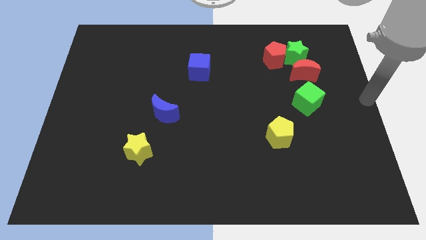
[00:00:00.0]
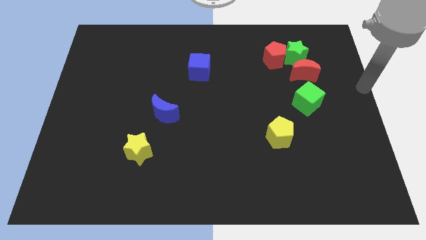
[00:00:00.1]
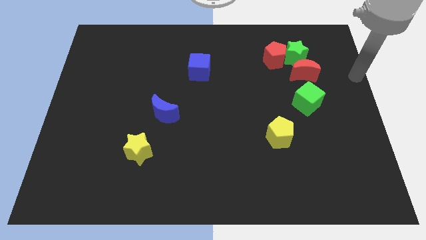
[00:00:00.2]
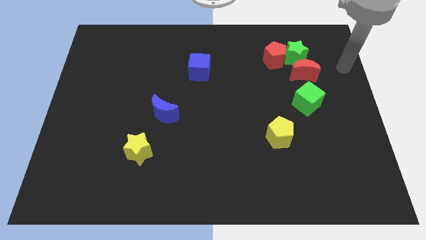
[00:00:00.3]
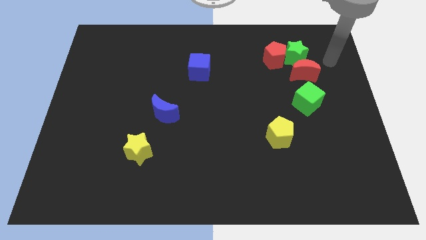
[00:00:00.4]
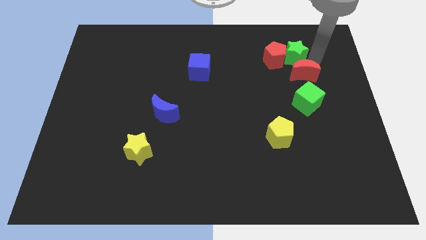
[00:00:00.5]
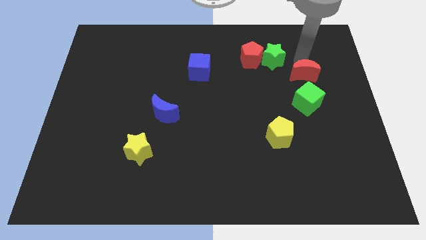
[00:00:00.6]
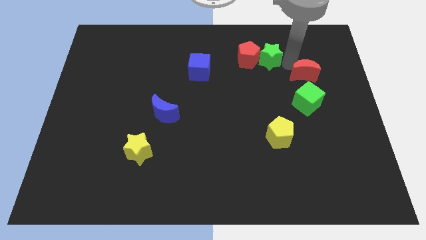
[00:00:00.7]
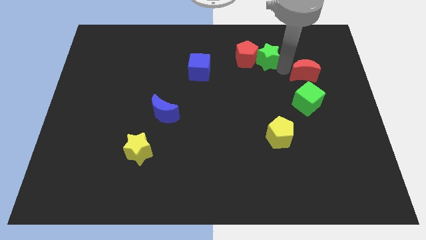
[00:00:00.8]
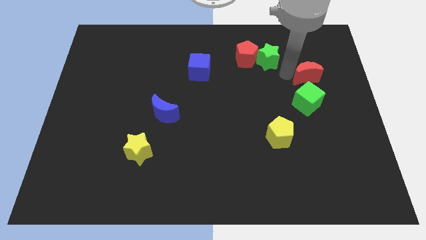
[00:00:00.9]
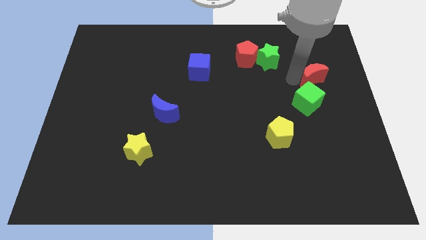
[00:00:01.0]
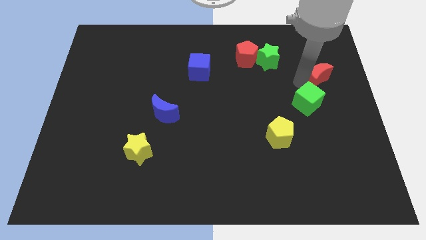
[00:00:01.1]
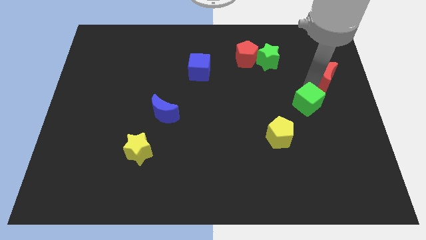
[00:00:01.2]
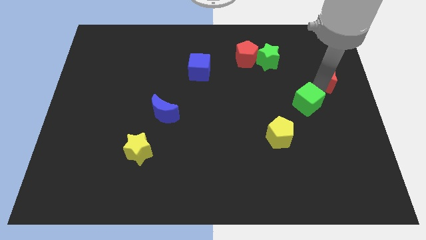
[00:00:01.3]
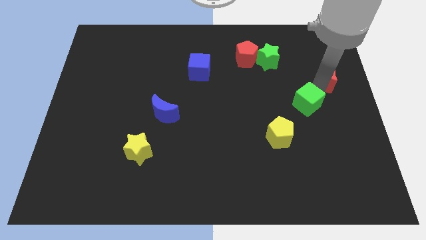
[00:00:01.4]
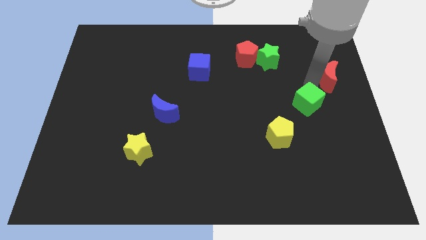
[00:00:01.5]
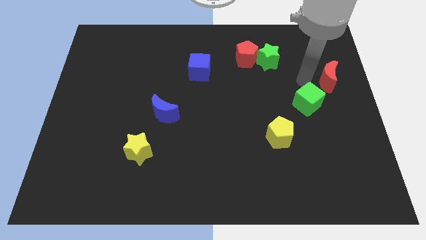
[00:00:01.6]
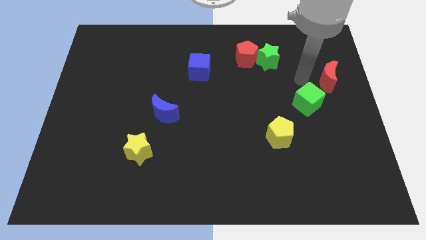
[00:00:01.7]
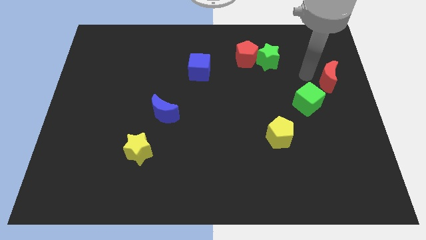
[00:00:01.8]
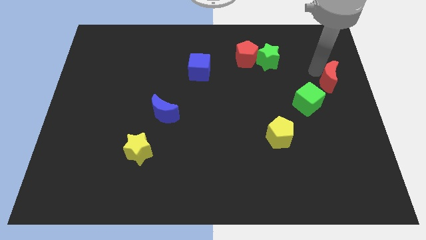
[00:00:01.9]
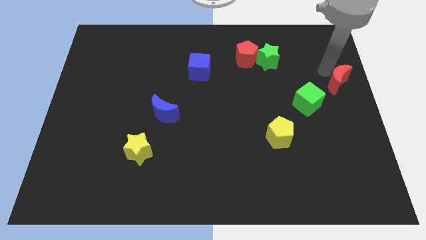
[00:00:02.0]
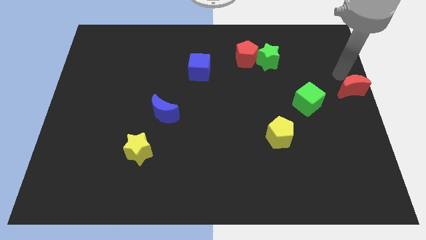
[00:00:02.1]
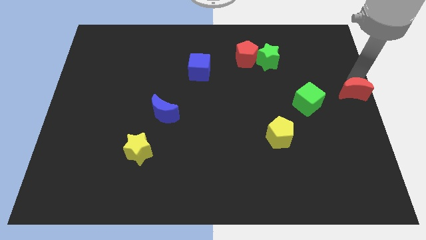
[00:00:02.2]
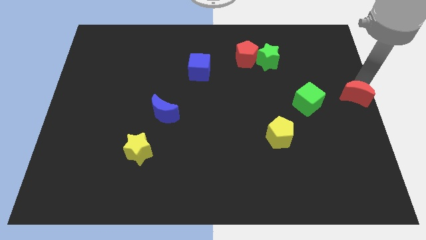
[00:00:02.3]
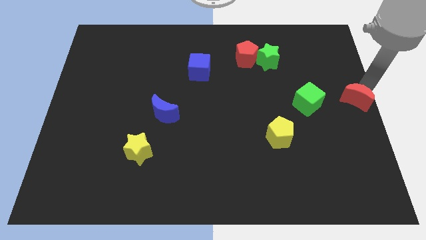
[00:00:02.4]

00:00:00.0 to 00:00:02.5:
separate red moon from green star

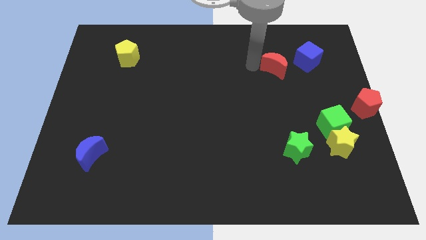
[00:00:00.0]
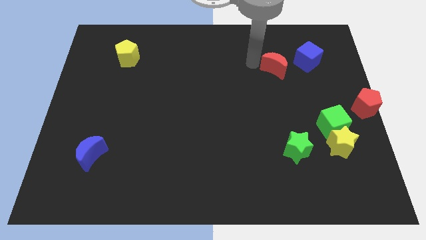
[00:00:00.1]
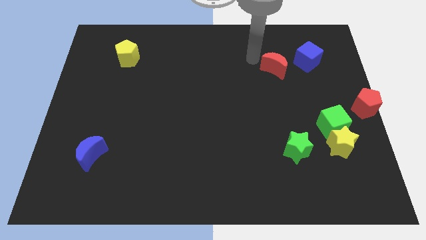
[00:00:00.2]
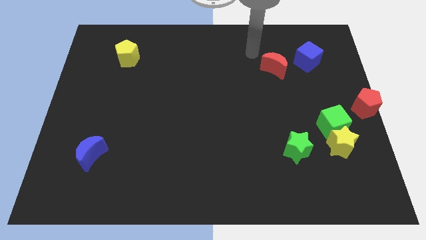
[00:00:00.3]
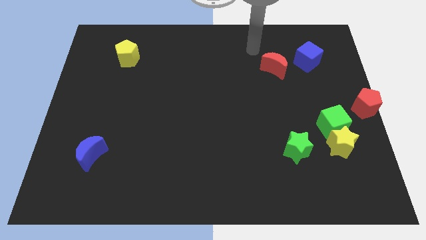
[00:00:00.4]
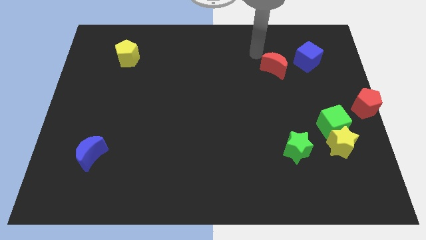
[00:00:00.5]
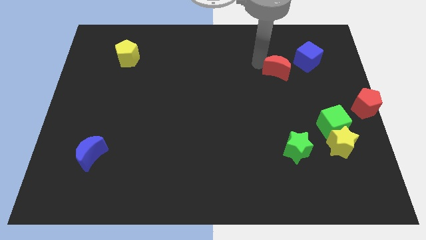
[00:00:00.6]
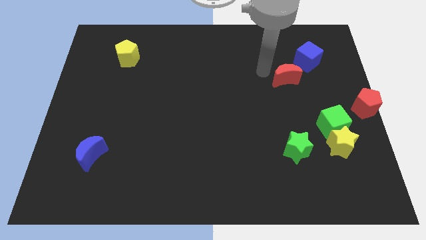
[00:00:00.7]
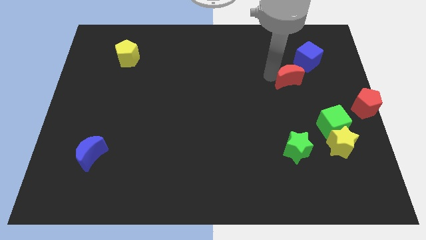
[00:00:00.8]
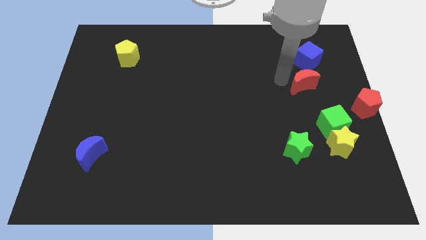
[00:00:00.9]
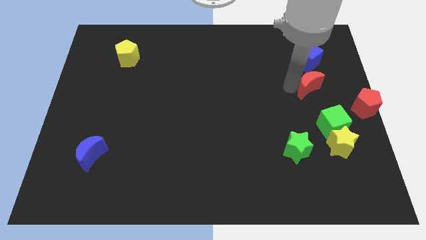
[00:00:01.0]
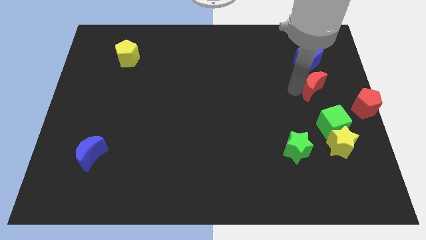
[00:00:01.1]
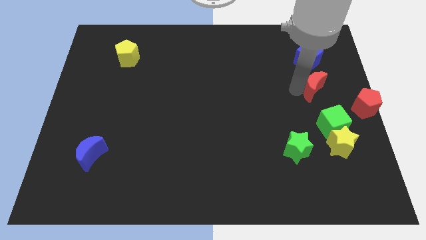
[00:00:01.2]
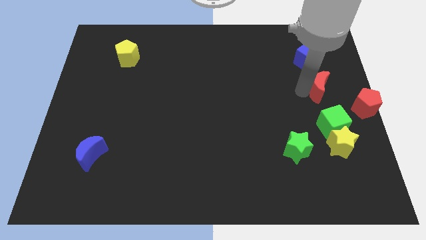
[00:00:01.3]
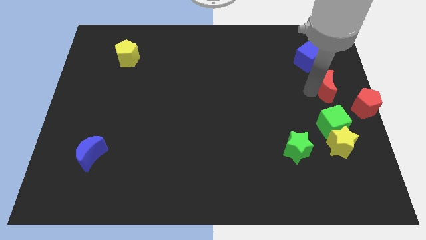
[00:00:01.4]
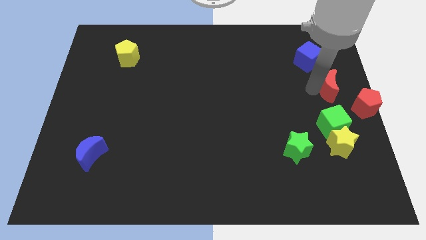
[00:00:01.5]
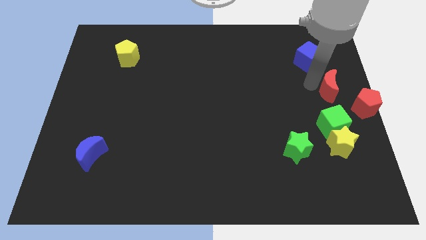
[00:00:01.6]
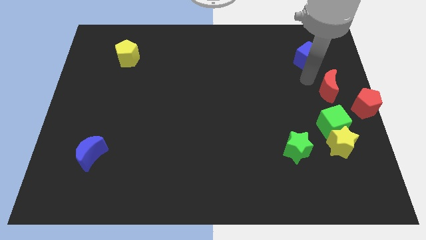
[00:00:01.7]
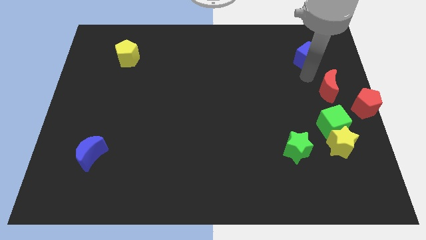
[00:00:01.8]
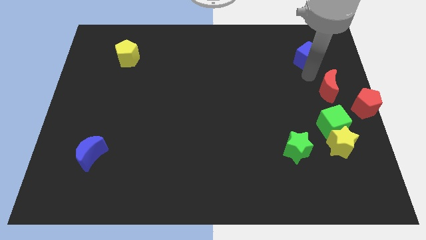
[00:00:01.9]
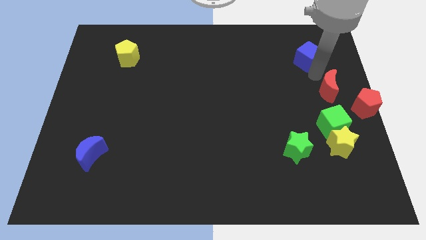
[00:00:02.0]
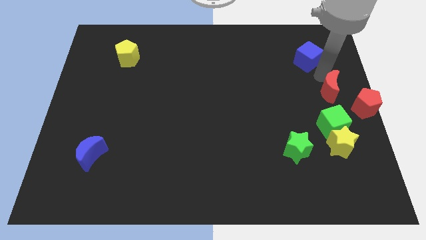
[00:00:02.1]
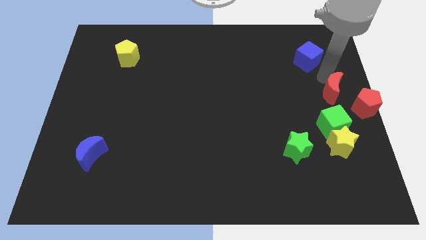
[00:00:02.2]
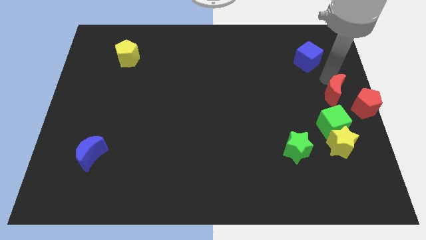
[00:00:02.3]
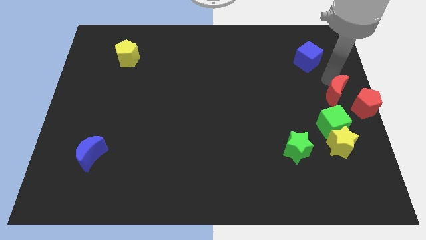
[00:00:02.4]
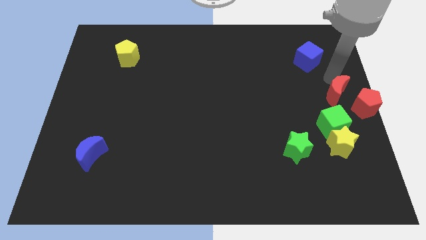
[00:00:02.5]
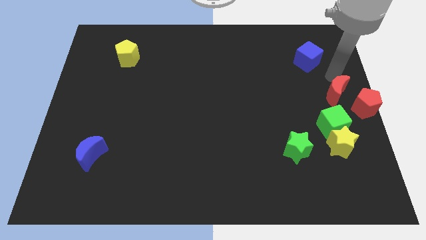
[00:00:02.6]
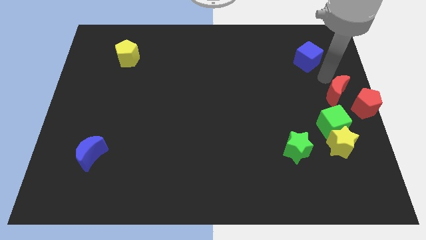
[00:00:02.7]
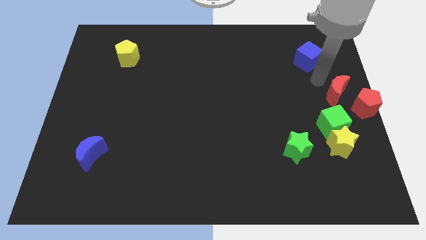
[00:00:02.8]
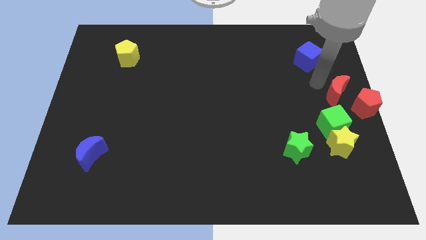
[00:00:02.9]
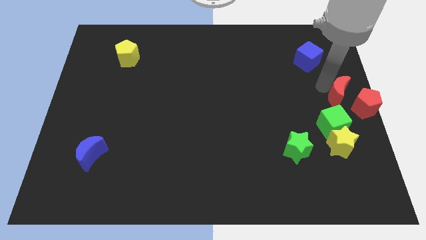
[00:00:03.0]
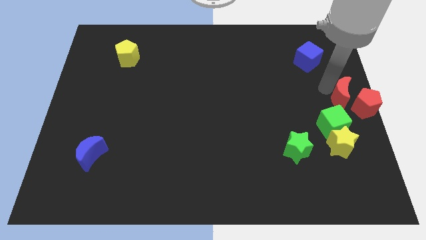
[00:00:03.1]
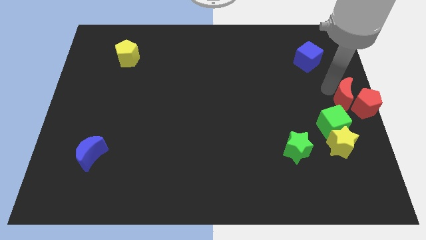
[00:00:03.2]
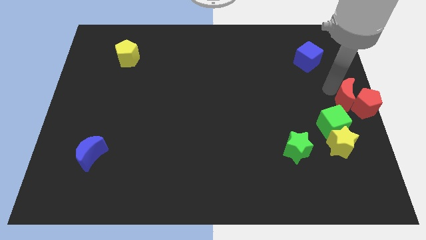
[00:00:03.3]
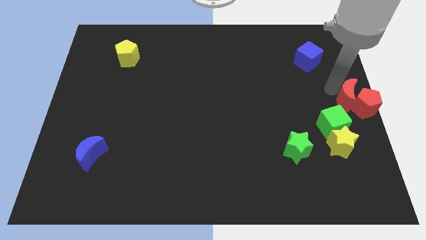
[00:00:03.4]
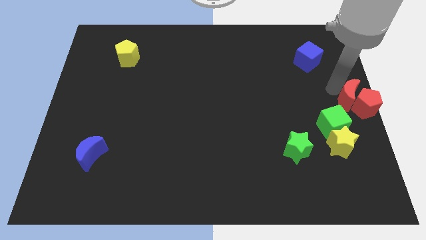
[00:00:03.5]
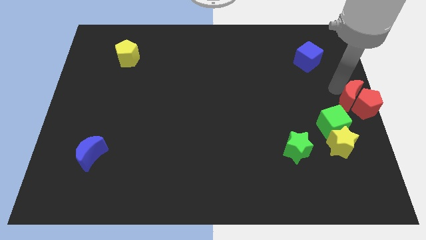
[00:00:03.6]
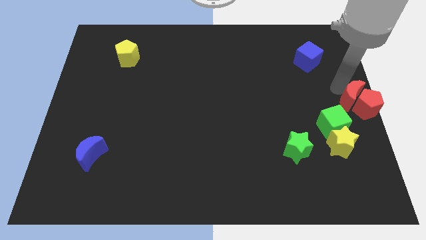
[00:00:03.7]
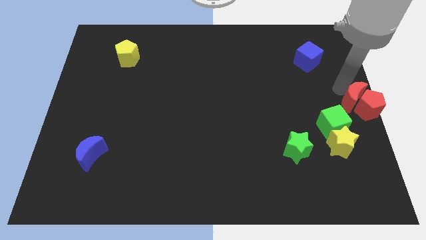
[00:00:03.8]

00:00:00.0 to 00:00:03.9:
drag the red moon into the red pentagon

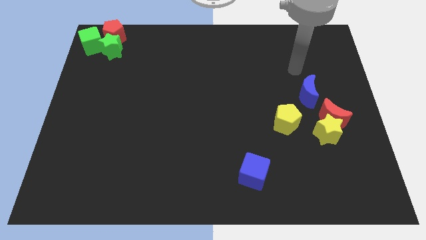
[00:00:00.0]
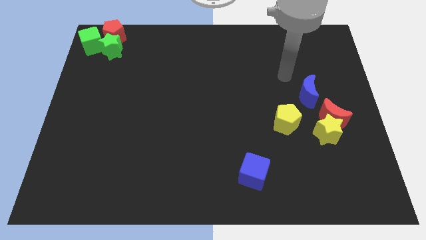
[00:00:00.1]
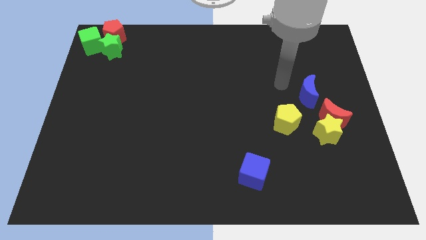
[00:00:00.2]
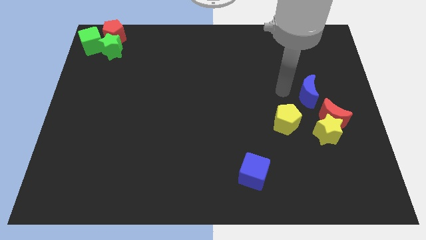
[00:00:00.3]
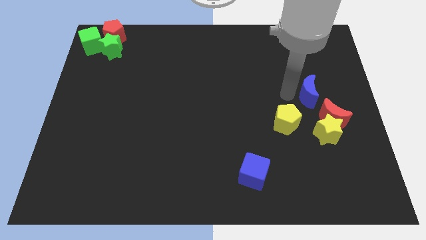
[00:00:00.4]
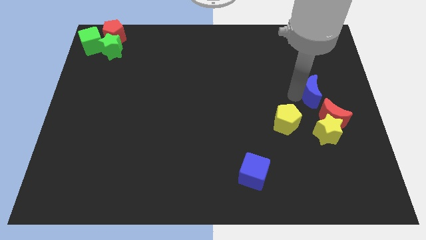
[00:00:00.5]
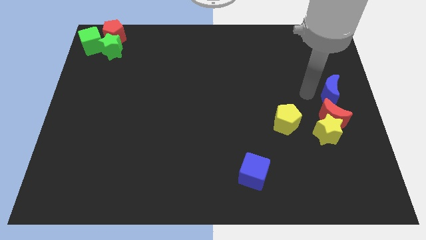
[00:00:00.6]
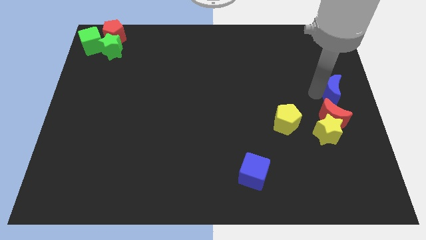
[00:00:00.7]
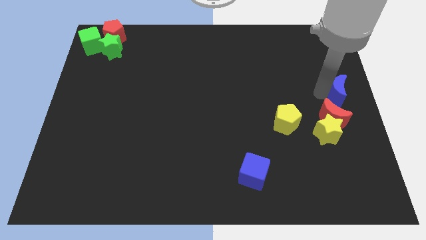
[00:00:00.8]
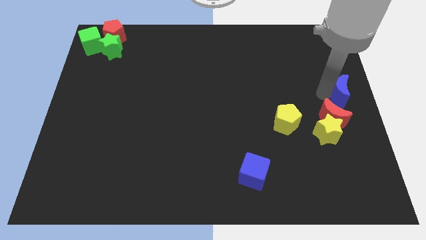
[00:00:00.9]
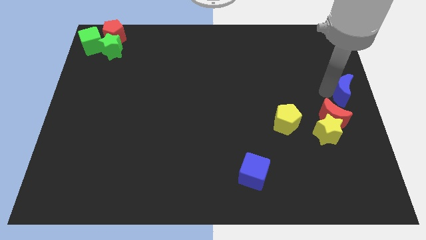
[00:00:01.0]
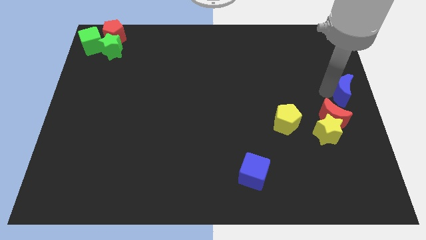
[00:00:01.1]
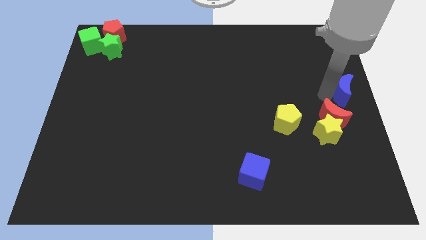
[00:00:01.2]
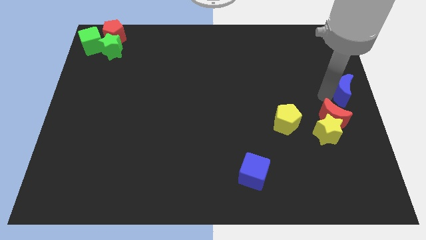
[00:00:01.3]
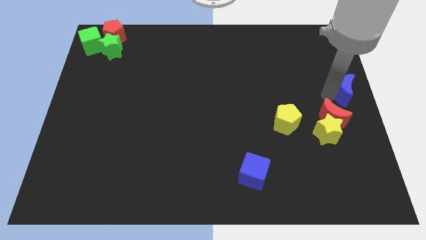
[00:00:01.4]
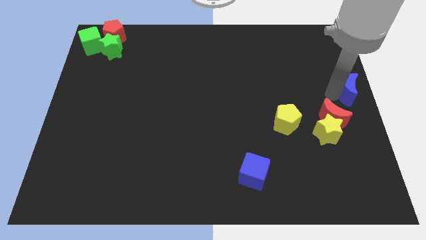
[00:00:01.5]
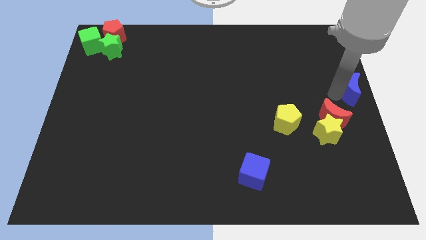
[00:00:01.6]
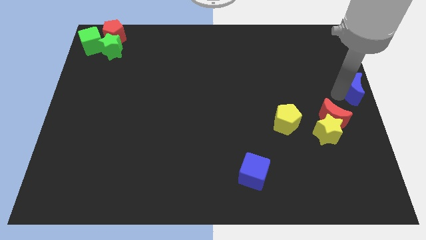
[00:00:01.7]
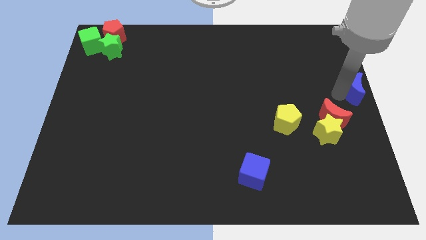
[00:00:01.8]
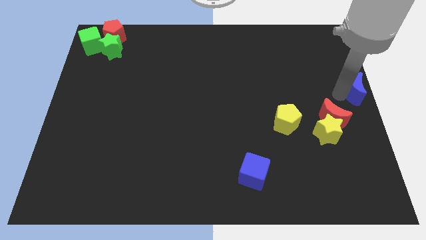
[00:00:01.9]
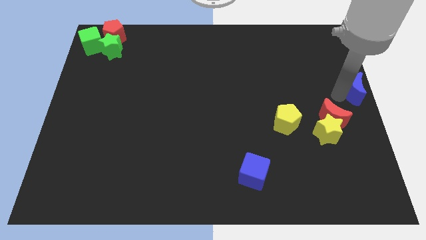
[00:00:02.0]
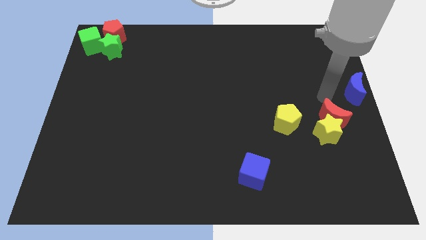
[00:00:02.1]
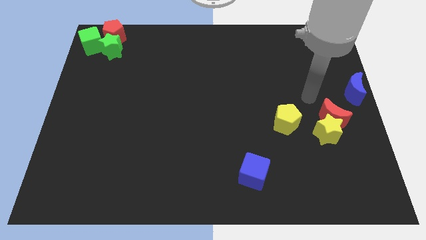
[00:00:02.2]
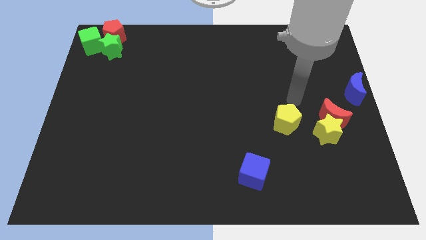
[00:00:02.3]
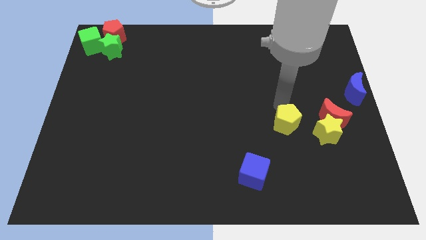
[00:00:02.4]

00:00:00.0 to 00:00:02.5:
place blue crescent to the right center of the board
